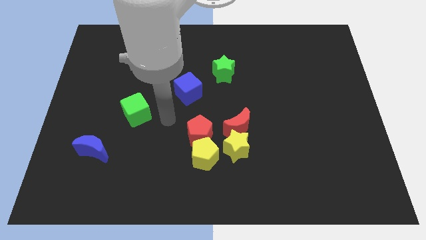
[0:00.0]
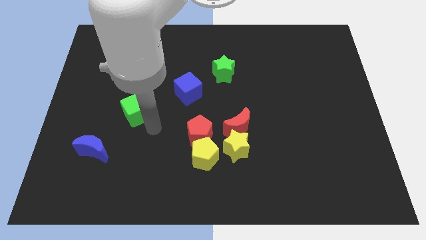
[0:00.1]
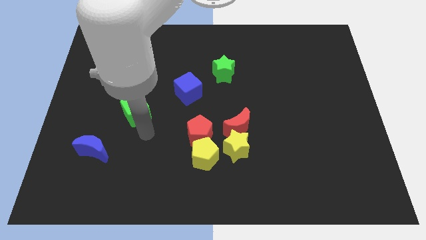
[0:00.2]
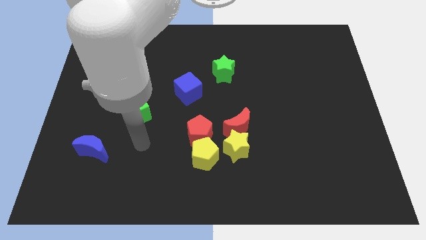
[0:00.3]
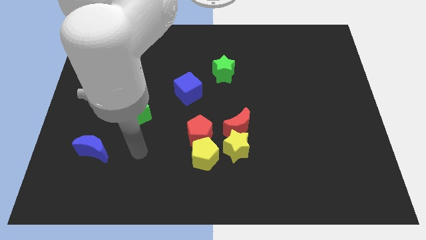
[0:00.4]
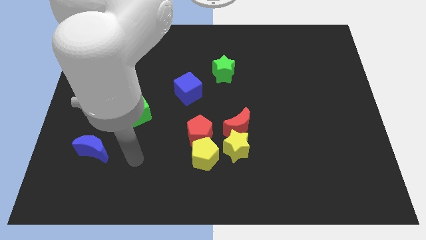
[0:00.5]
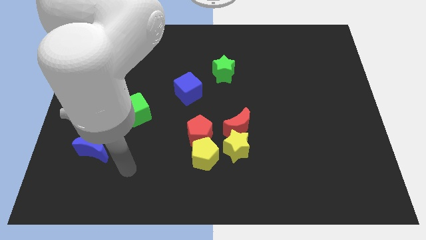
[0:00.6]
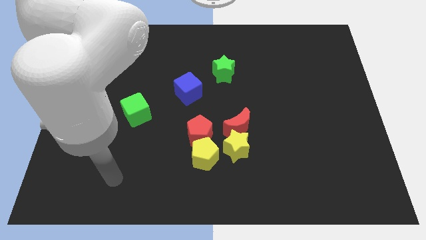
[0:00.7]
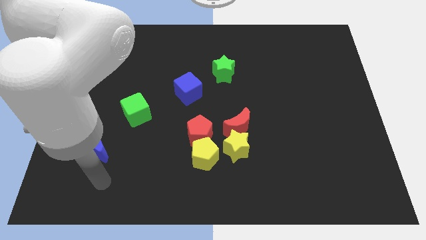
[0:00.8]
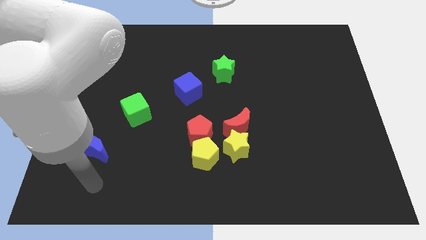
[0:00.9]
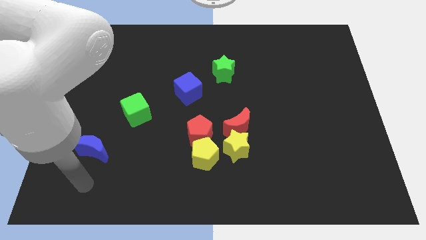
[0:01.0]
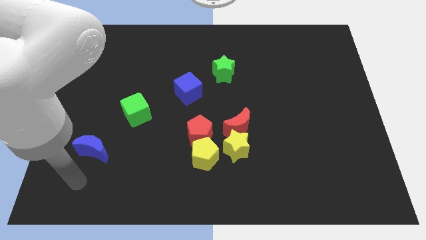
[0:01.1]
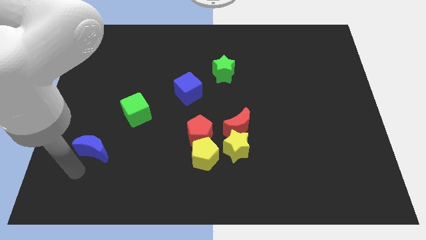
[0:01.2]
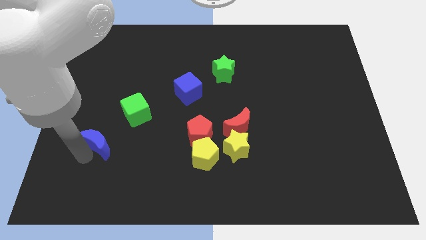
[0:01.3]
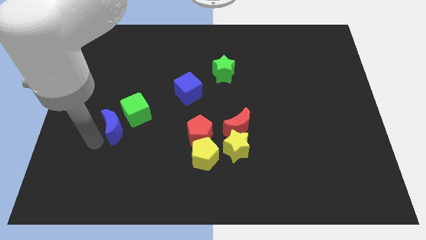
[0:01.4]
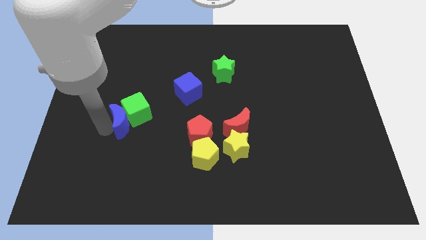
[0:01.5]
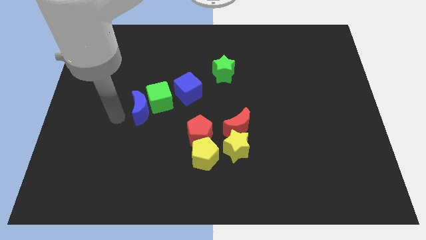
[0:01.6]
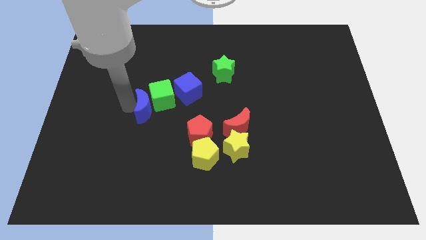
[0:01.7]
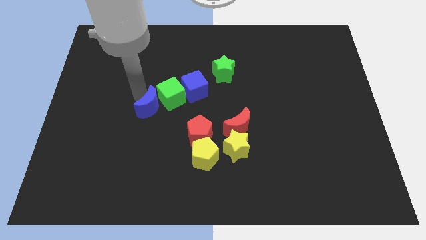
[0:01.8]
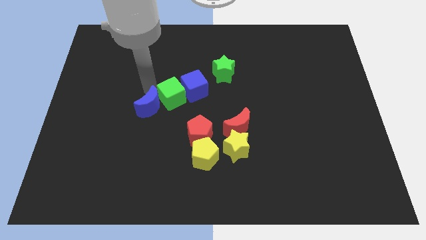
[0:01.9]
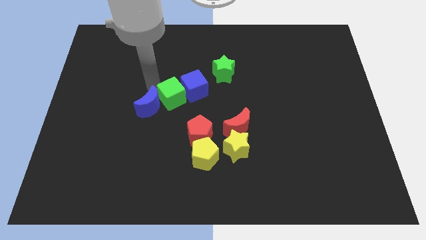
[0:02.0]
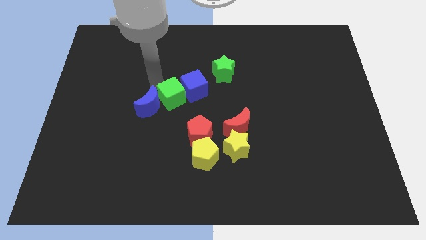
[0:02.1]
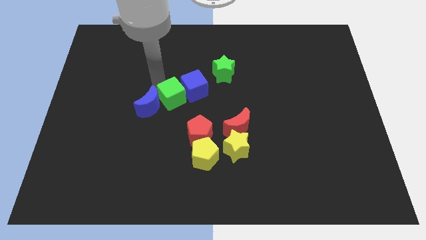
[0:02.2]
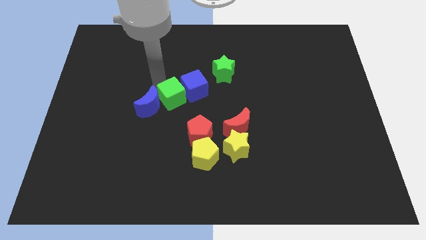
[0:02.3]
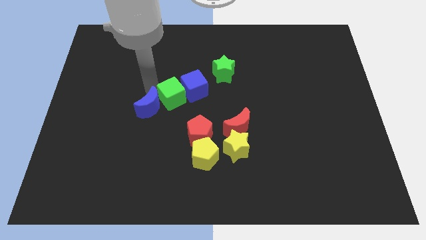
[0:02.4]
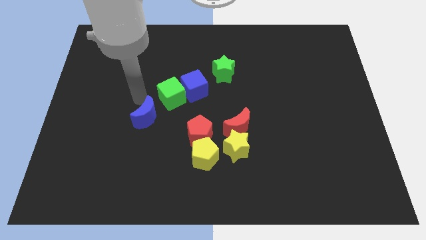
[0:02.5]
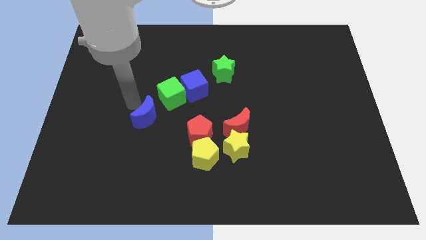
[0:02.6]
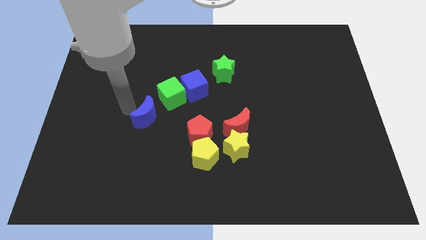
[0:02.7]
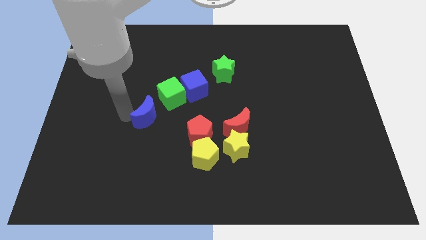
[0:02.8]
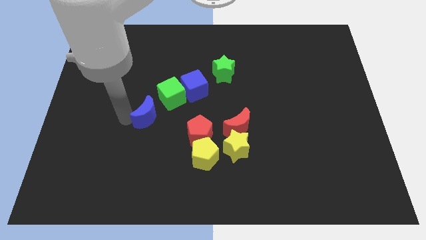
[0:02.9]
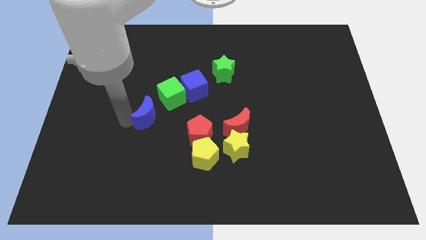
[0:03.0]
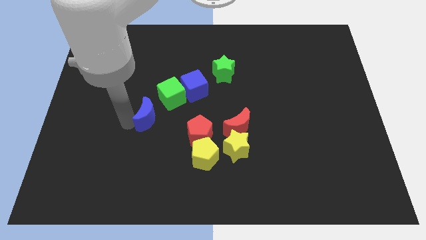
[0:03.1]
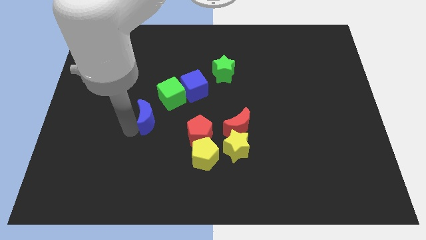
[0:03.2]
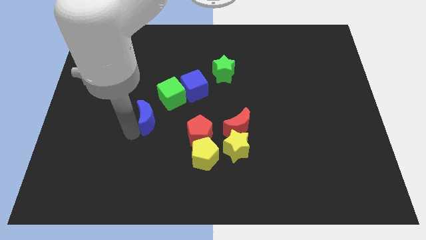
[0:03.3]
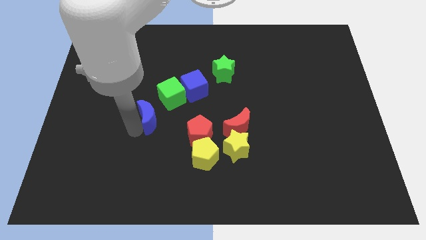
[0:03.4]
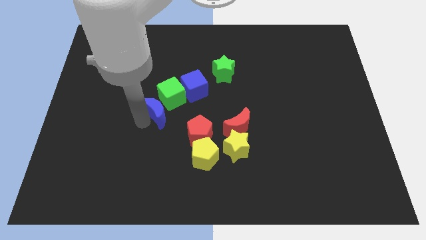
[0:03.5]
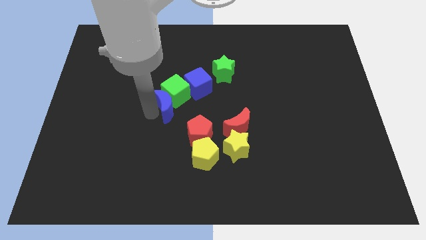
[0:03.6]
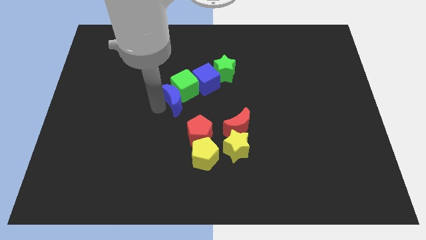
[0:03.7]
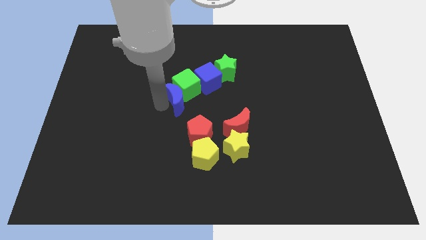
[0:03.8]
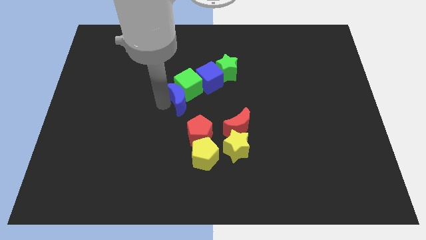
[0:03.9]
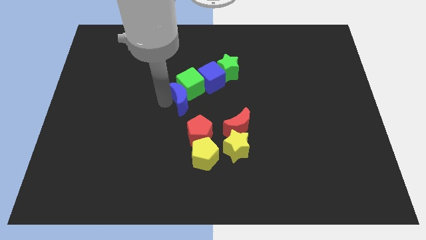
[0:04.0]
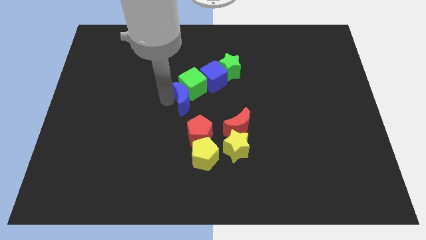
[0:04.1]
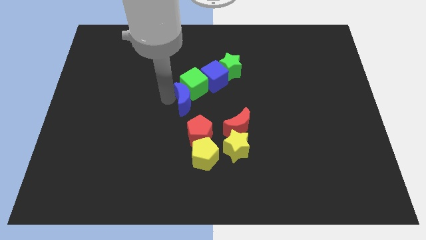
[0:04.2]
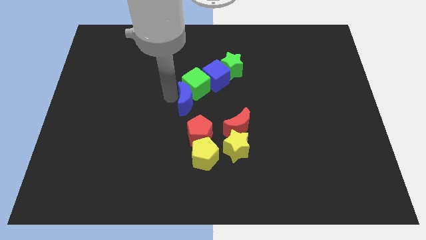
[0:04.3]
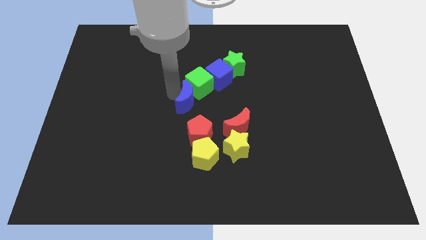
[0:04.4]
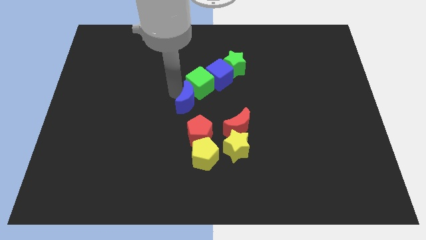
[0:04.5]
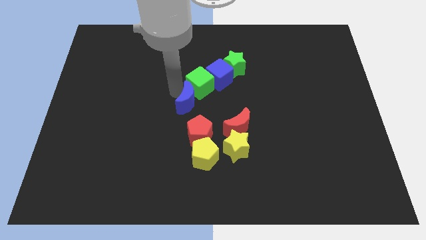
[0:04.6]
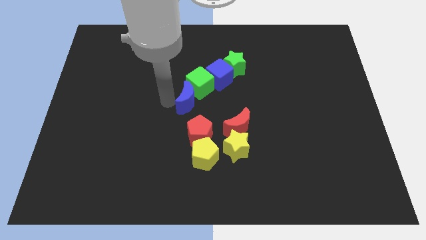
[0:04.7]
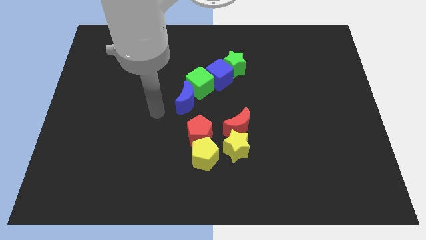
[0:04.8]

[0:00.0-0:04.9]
push the blue crescent into the green cube

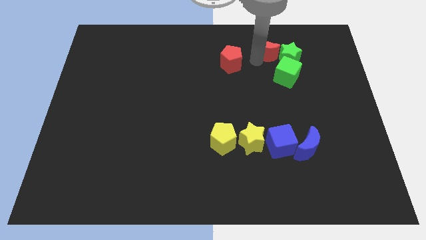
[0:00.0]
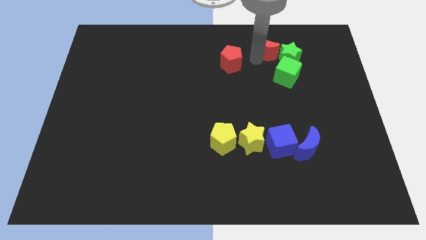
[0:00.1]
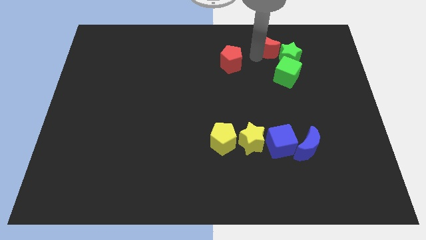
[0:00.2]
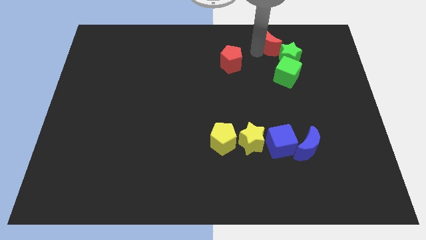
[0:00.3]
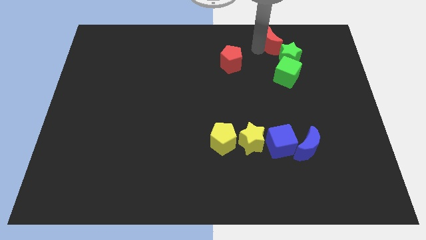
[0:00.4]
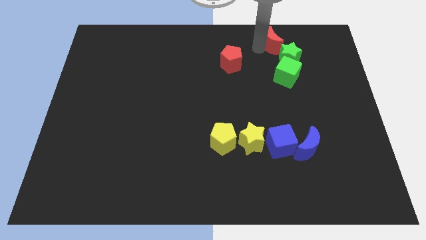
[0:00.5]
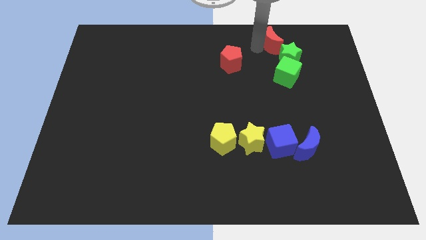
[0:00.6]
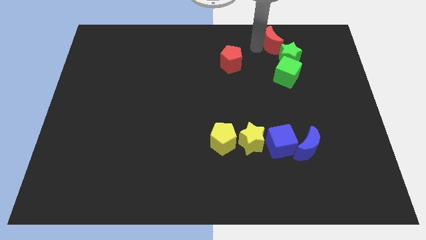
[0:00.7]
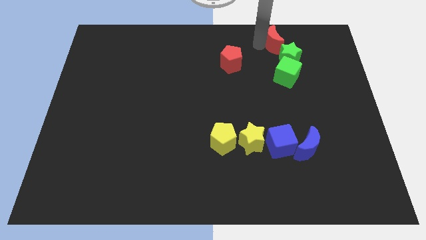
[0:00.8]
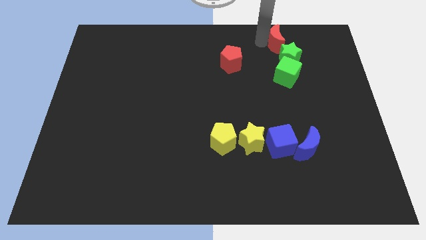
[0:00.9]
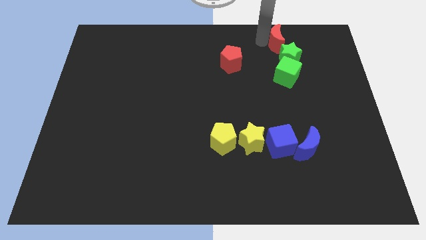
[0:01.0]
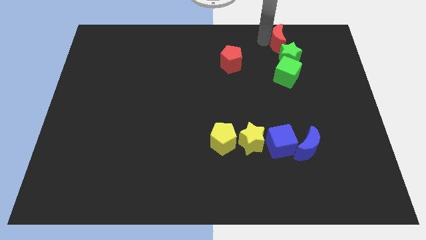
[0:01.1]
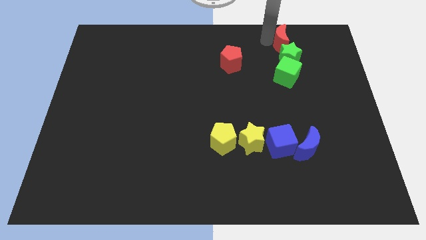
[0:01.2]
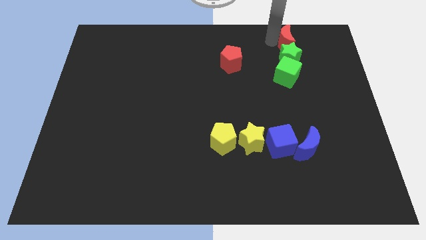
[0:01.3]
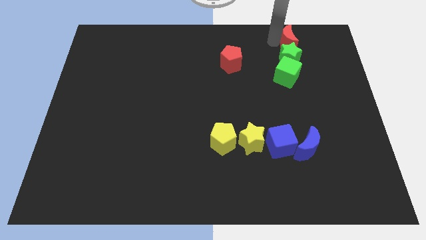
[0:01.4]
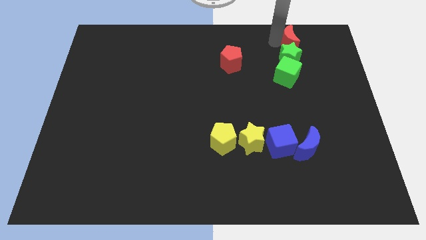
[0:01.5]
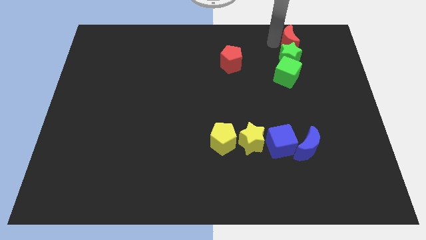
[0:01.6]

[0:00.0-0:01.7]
place the red crescent to the top of the green star

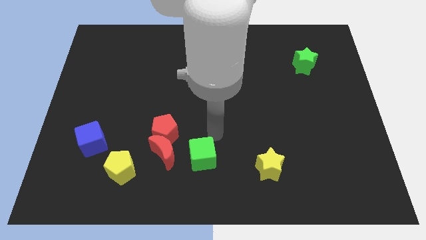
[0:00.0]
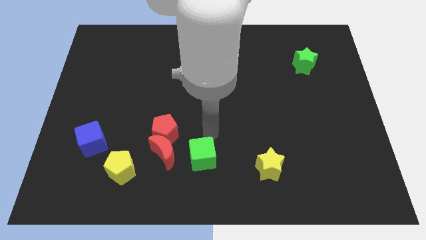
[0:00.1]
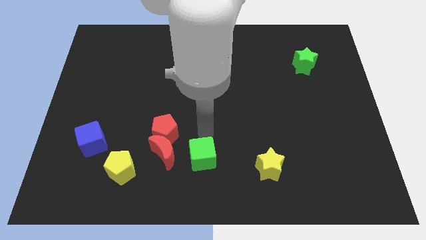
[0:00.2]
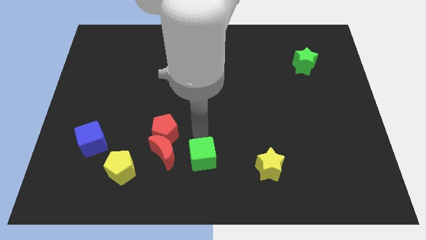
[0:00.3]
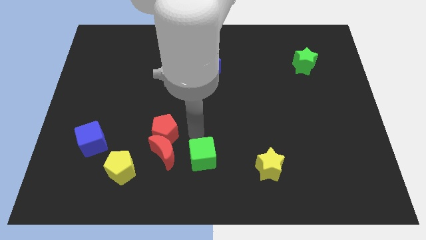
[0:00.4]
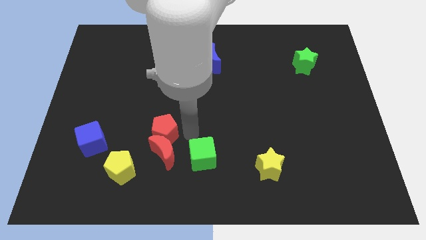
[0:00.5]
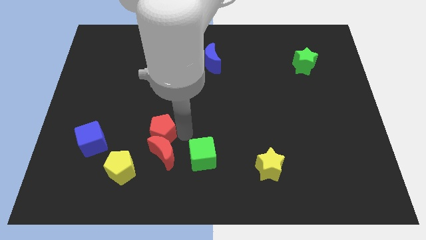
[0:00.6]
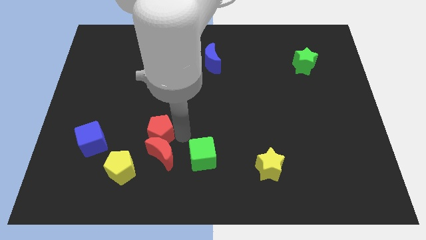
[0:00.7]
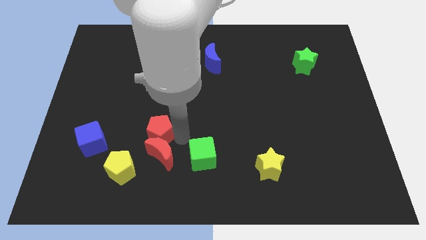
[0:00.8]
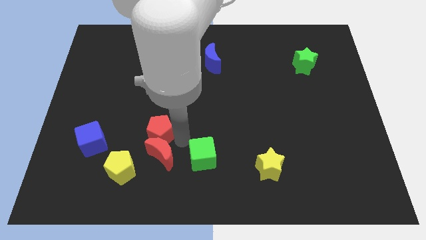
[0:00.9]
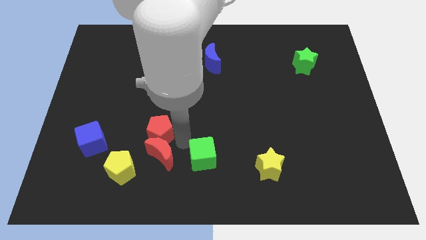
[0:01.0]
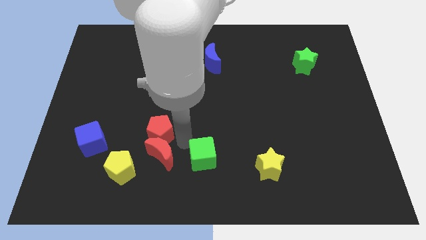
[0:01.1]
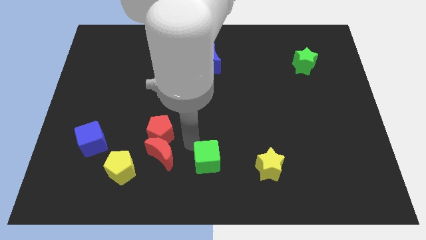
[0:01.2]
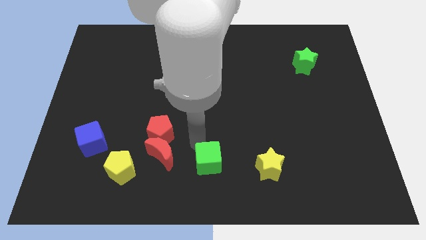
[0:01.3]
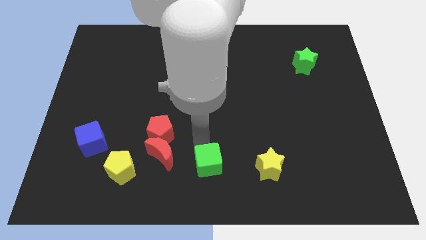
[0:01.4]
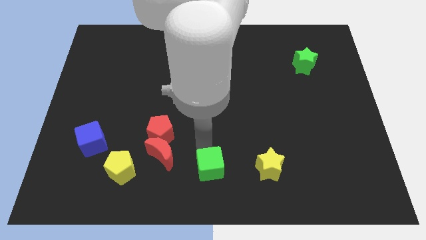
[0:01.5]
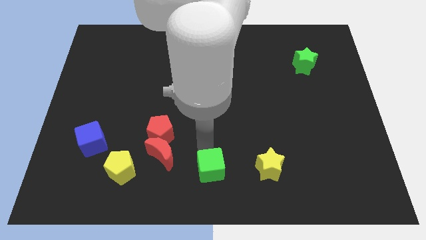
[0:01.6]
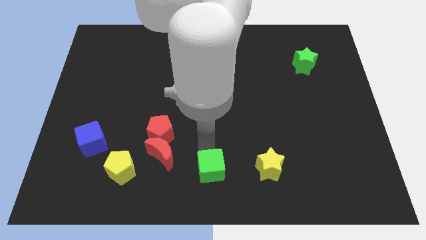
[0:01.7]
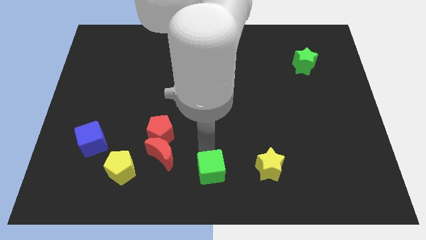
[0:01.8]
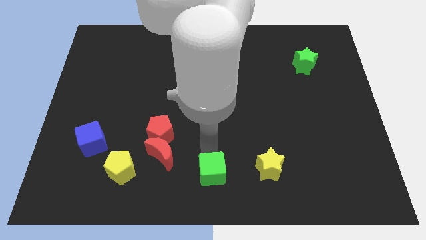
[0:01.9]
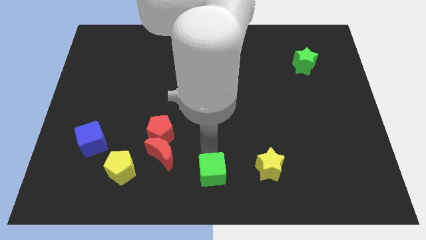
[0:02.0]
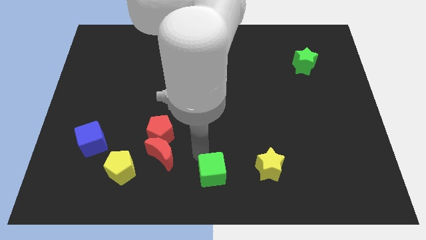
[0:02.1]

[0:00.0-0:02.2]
push the green cube to the bottom

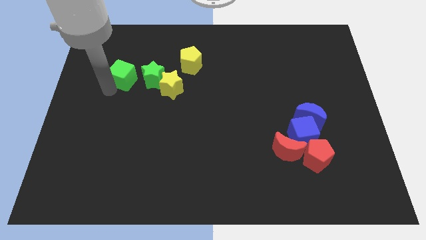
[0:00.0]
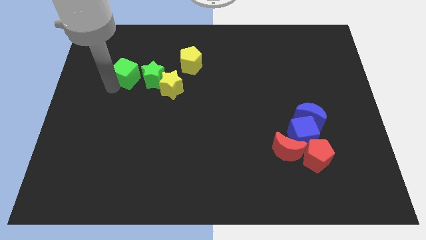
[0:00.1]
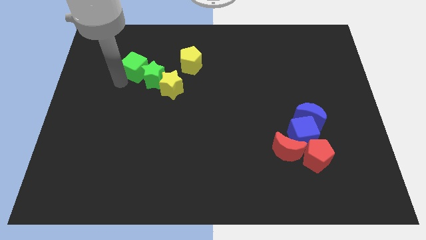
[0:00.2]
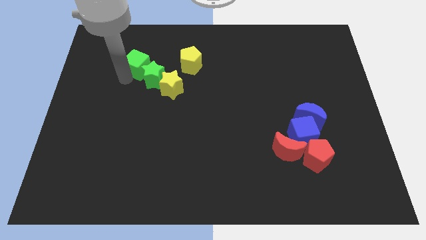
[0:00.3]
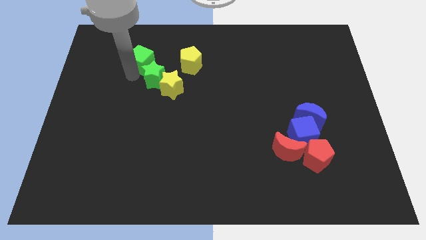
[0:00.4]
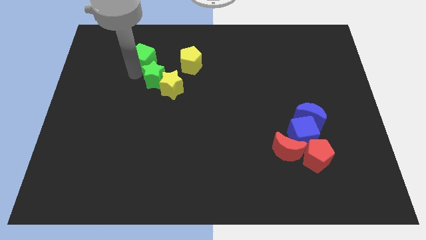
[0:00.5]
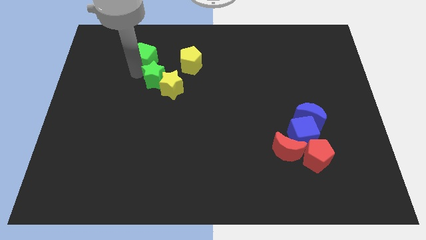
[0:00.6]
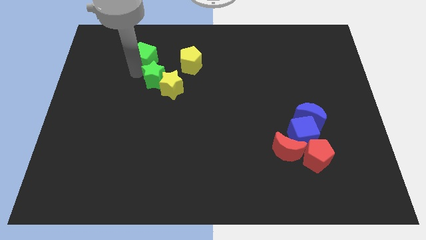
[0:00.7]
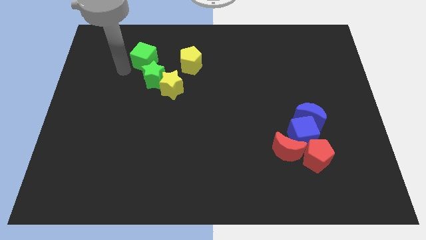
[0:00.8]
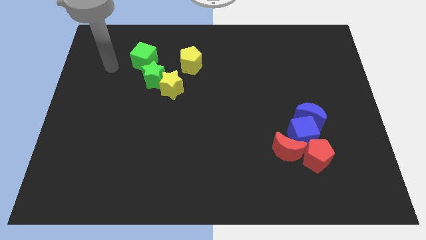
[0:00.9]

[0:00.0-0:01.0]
place green cube above the green star
